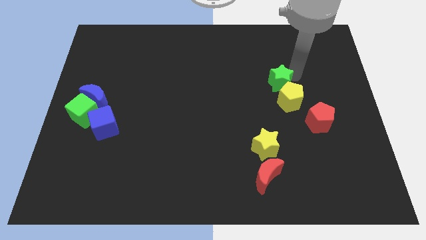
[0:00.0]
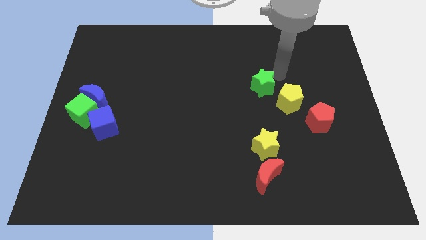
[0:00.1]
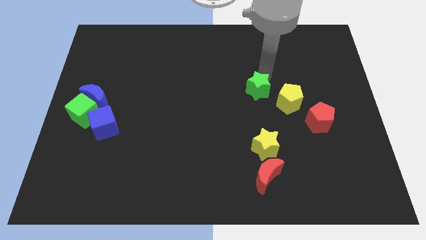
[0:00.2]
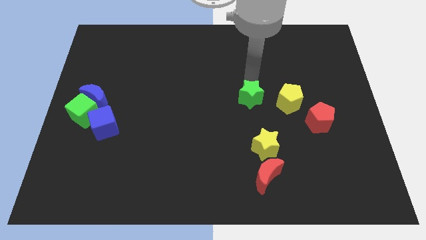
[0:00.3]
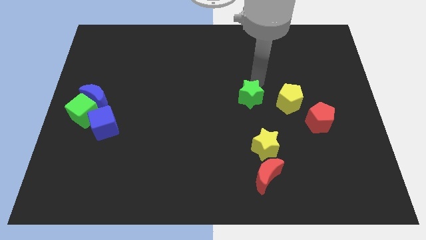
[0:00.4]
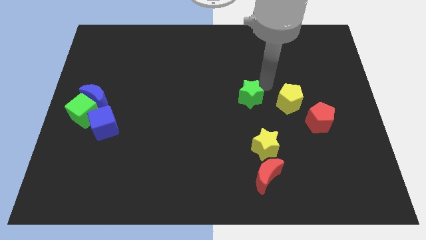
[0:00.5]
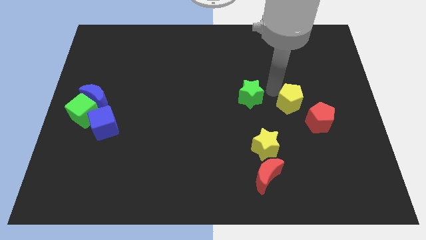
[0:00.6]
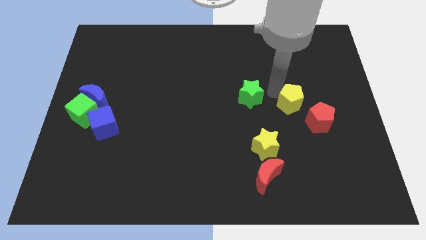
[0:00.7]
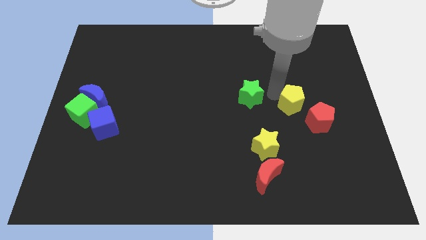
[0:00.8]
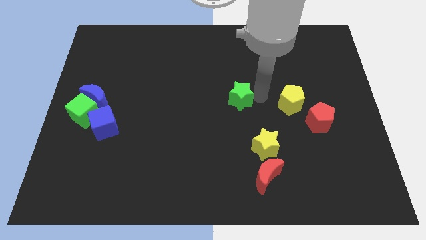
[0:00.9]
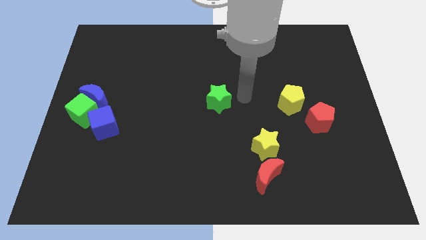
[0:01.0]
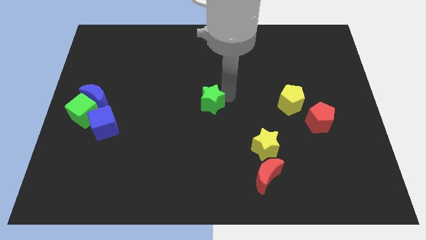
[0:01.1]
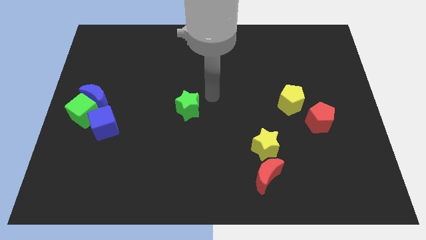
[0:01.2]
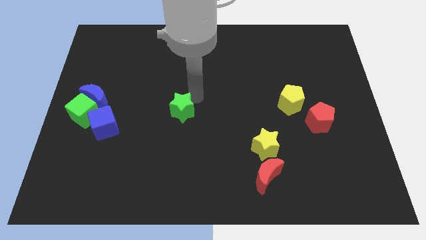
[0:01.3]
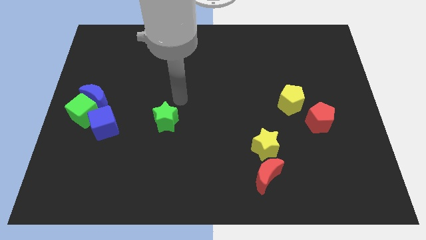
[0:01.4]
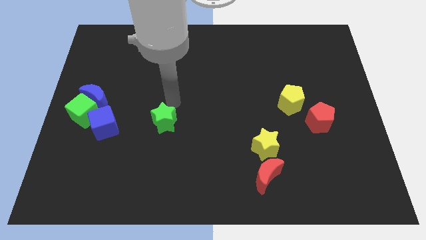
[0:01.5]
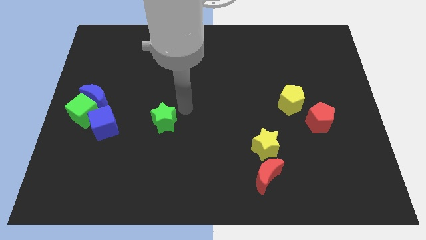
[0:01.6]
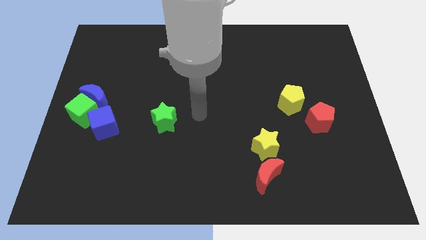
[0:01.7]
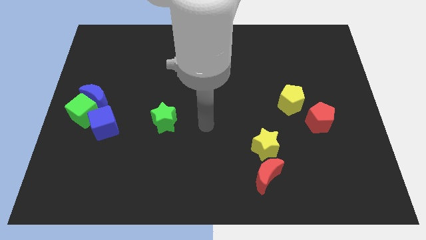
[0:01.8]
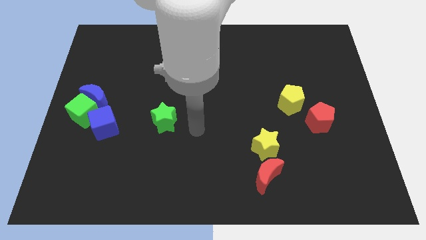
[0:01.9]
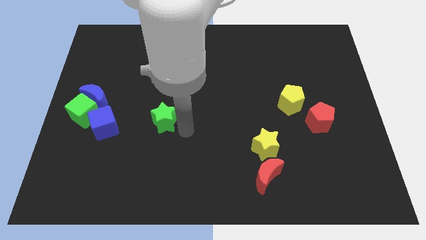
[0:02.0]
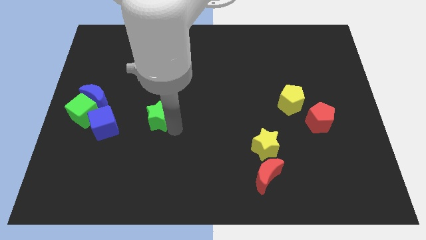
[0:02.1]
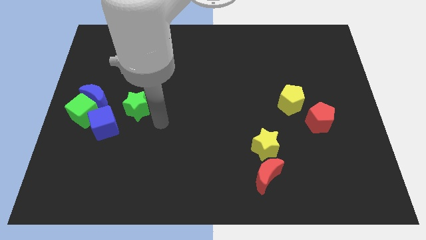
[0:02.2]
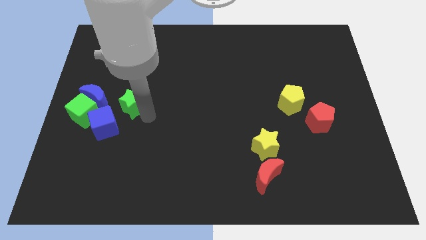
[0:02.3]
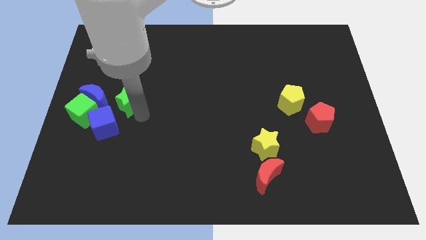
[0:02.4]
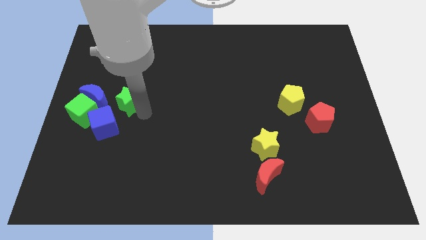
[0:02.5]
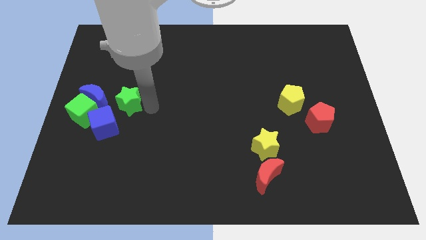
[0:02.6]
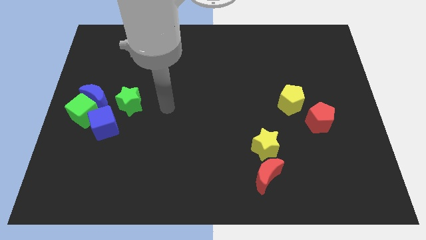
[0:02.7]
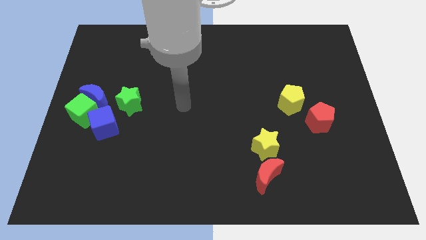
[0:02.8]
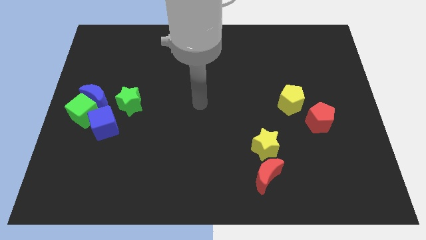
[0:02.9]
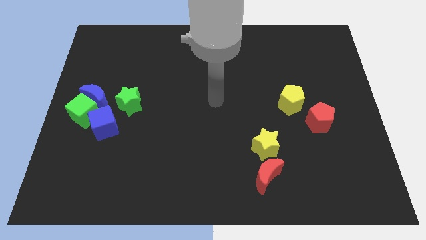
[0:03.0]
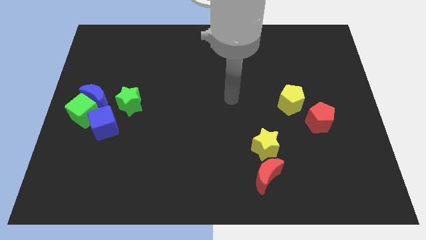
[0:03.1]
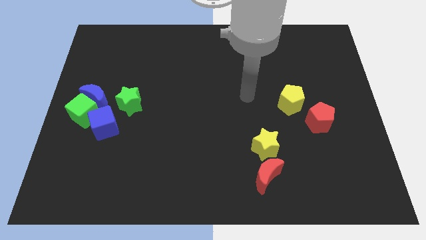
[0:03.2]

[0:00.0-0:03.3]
push the green star right to the blue moon

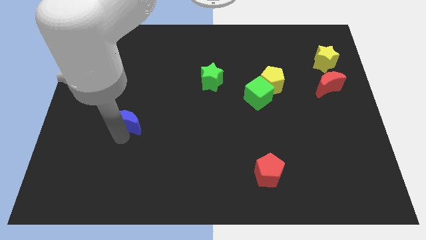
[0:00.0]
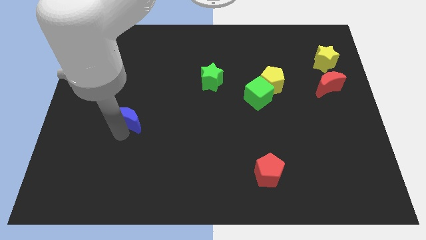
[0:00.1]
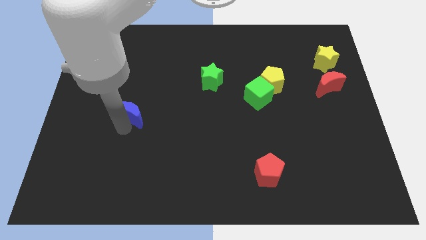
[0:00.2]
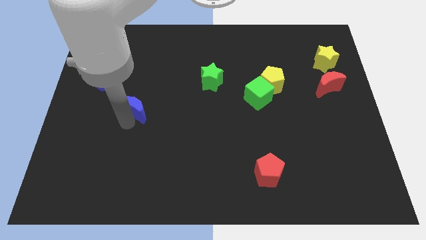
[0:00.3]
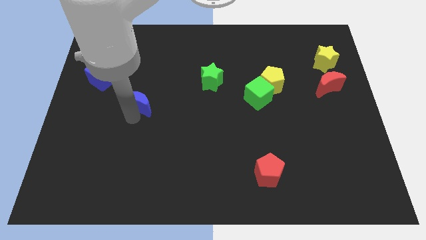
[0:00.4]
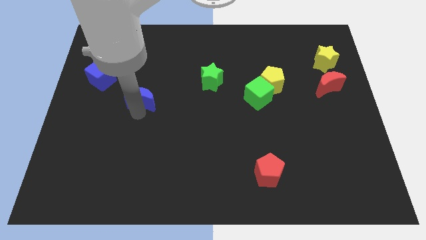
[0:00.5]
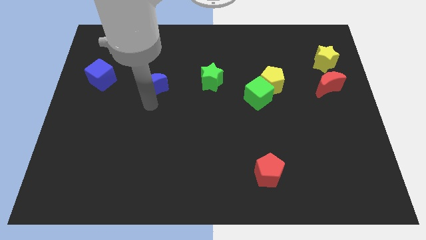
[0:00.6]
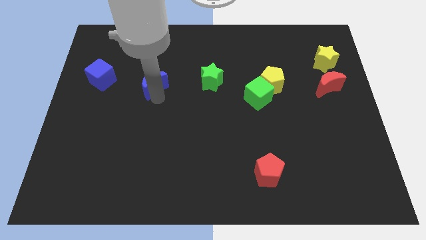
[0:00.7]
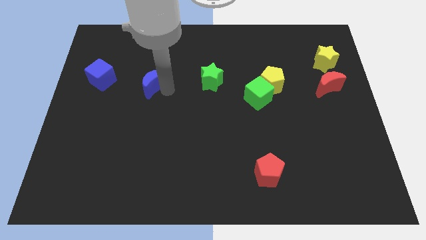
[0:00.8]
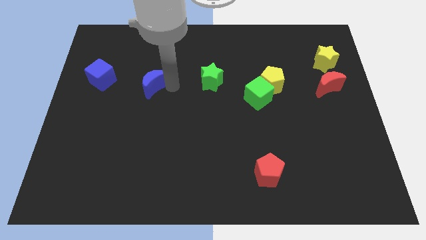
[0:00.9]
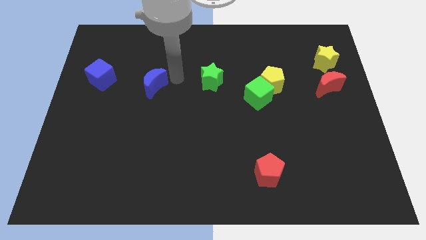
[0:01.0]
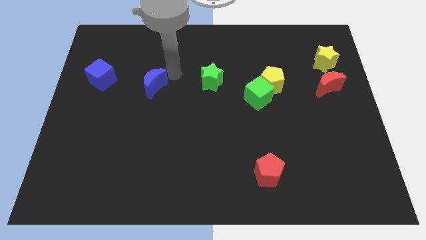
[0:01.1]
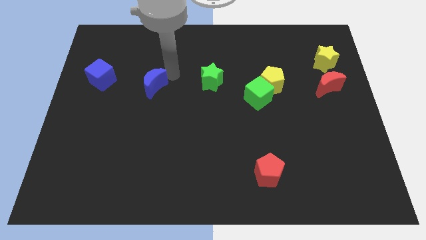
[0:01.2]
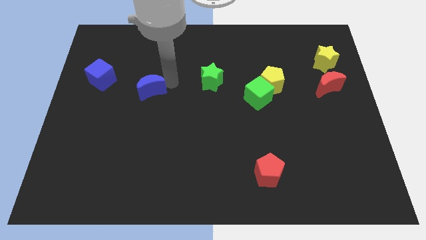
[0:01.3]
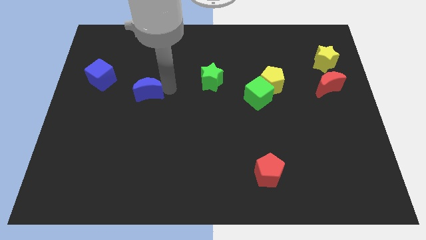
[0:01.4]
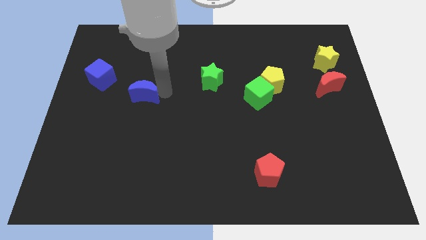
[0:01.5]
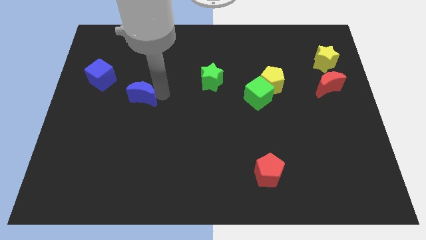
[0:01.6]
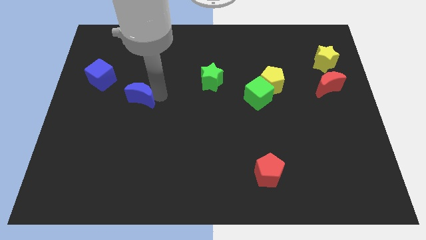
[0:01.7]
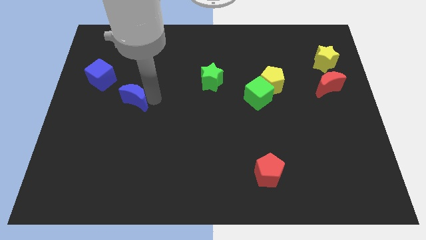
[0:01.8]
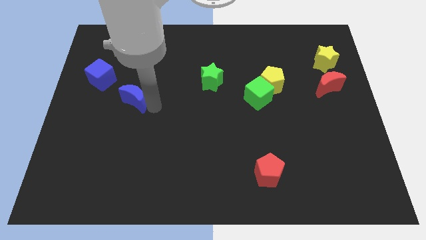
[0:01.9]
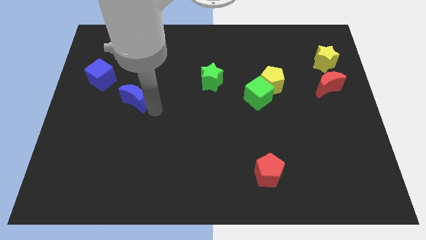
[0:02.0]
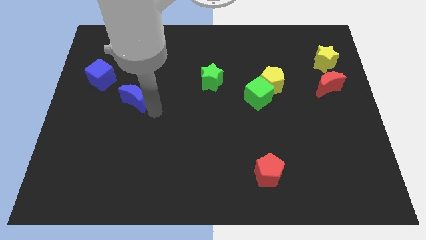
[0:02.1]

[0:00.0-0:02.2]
slide the blue moon diagonally on the bottom right side of the blue cube

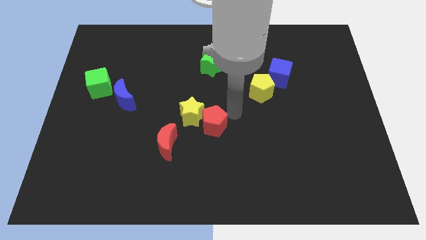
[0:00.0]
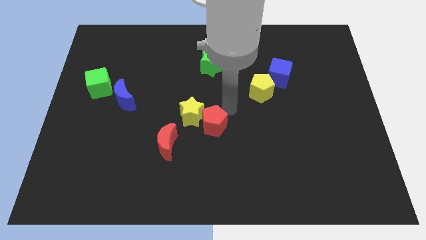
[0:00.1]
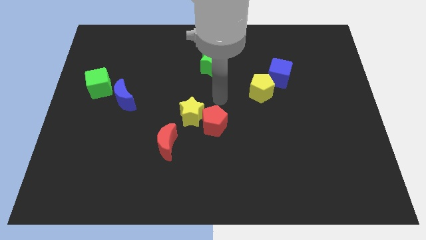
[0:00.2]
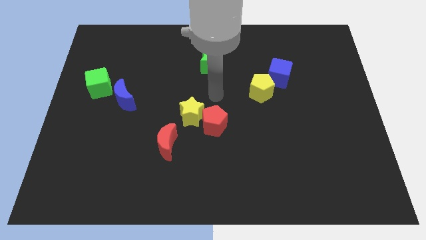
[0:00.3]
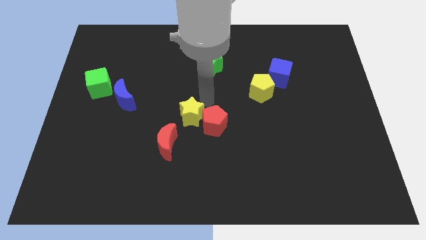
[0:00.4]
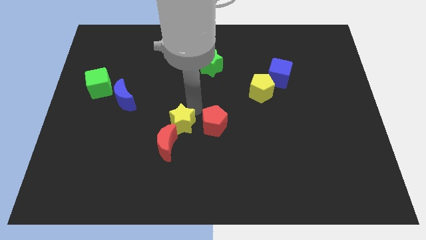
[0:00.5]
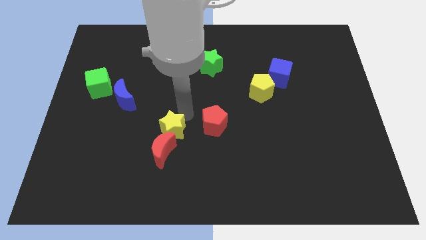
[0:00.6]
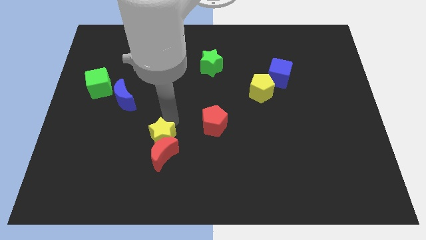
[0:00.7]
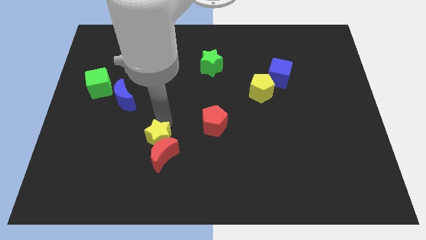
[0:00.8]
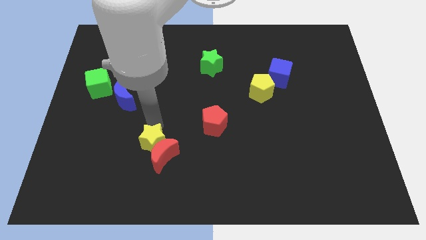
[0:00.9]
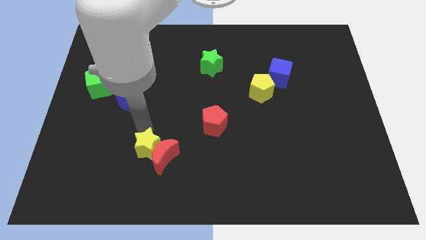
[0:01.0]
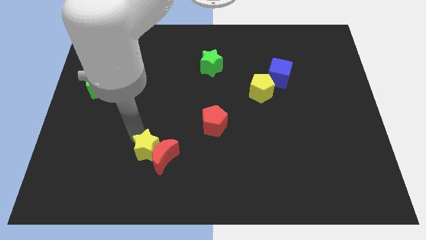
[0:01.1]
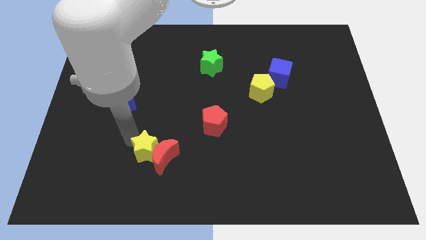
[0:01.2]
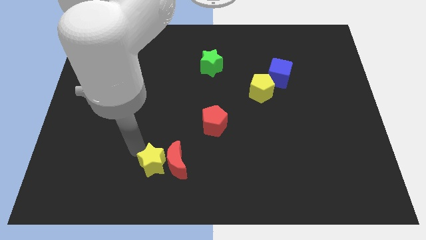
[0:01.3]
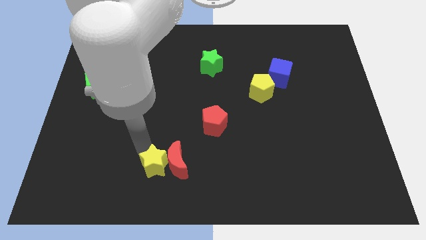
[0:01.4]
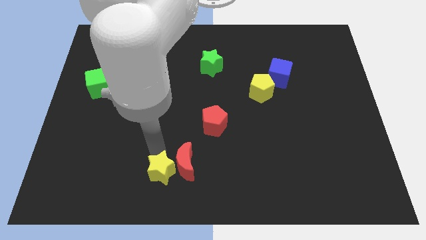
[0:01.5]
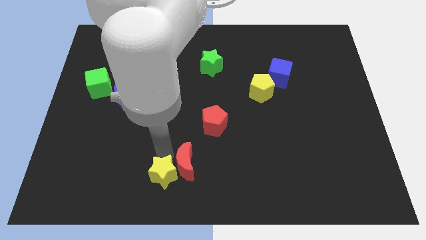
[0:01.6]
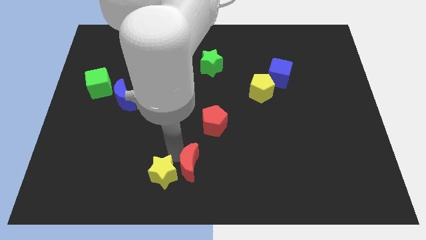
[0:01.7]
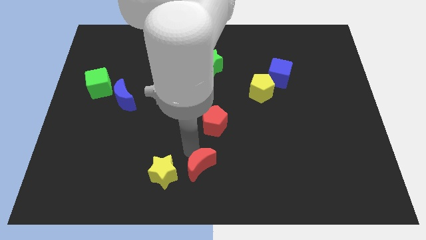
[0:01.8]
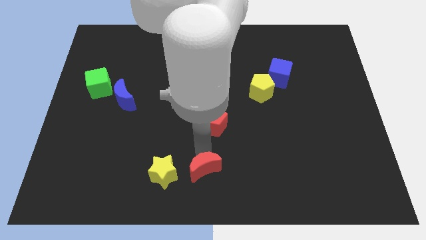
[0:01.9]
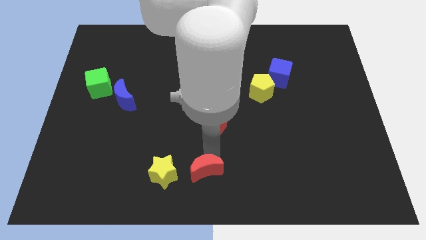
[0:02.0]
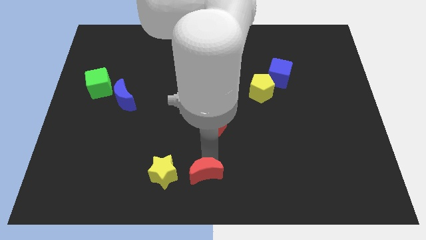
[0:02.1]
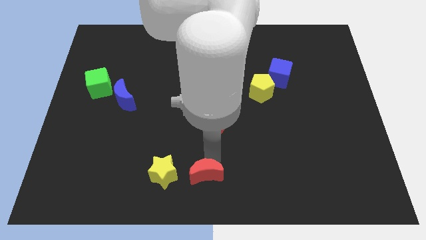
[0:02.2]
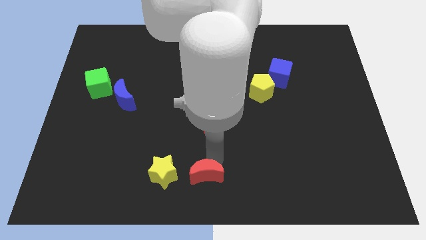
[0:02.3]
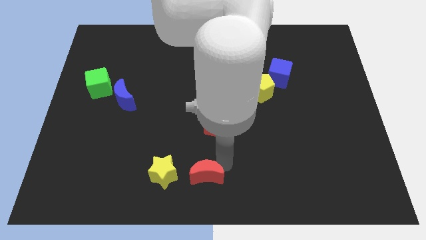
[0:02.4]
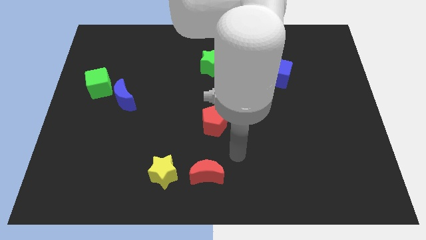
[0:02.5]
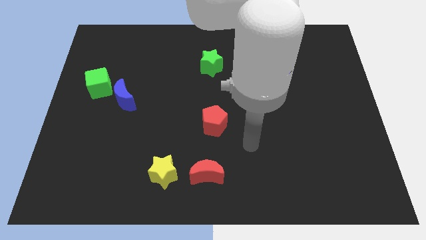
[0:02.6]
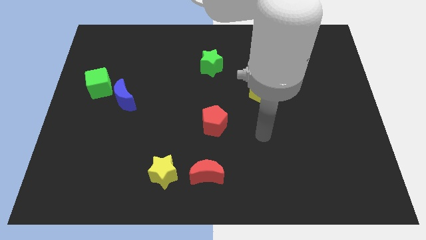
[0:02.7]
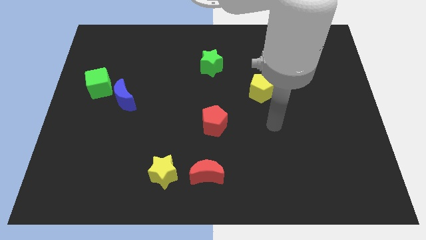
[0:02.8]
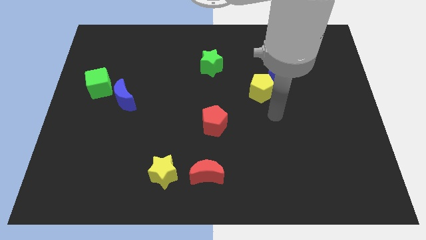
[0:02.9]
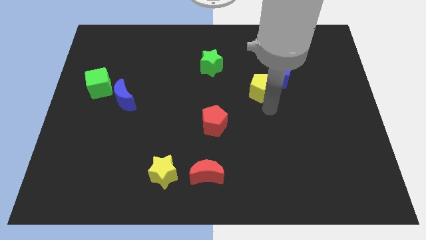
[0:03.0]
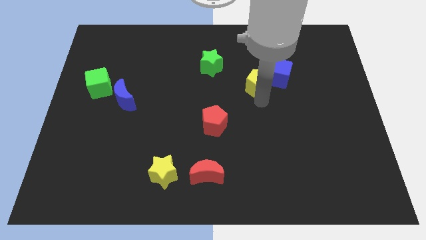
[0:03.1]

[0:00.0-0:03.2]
move the red crescent and the yellow star towards the bottom of the board

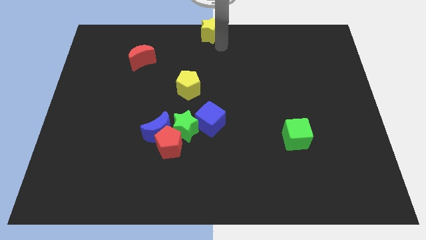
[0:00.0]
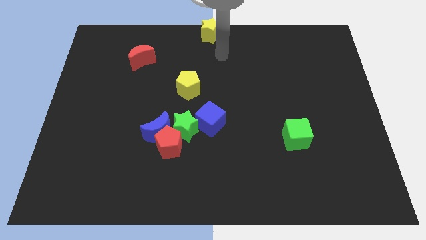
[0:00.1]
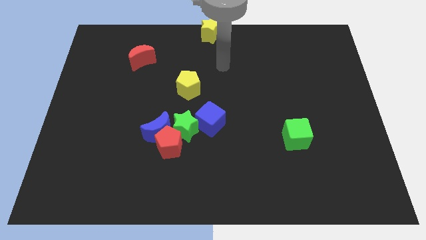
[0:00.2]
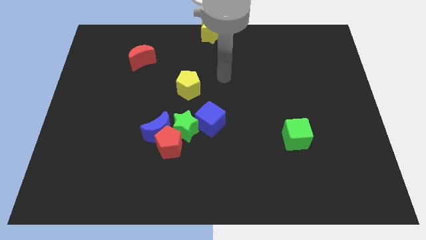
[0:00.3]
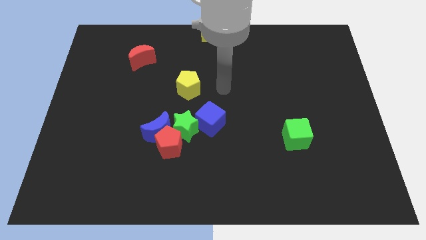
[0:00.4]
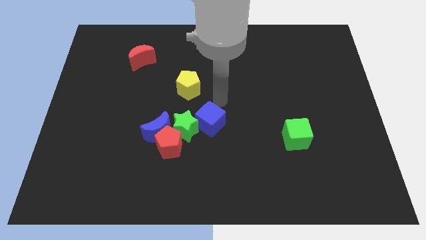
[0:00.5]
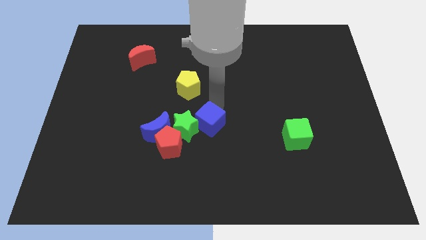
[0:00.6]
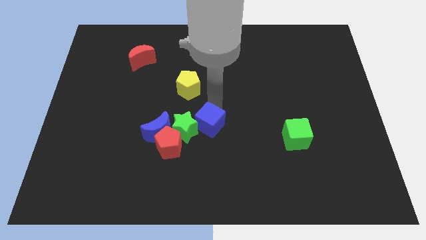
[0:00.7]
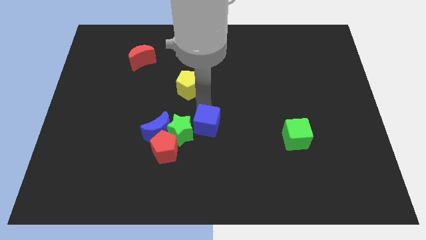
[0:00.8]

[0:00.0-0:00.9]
tap the blue cube
